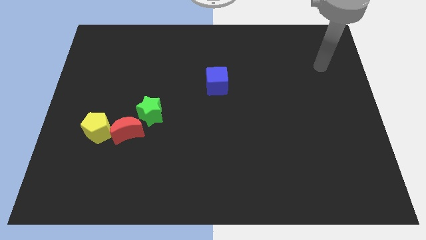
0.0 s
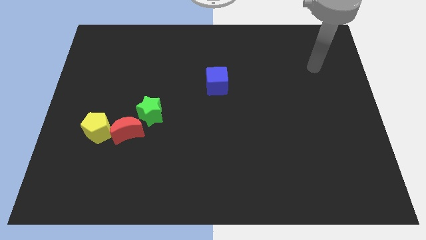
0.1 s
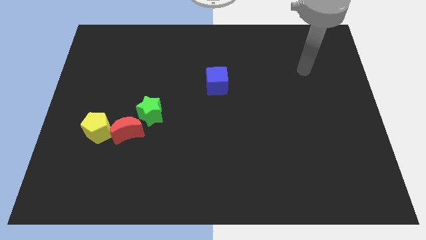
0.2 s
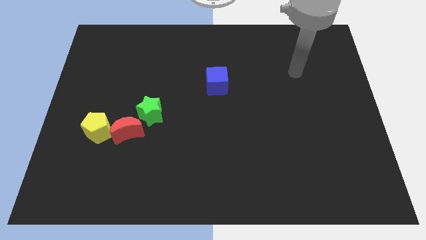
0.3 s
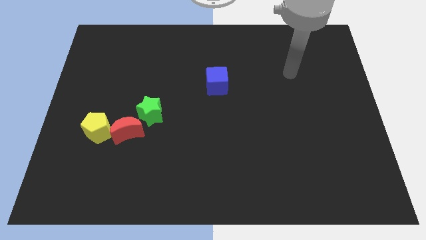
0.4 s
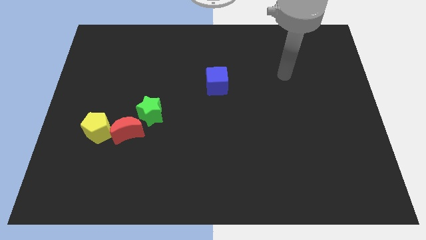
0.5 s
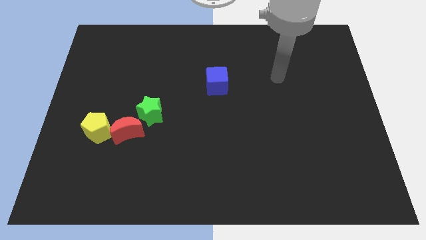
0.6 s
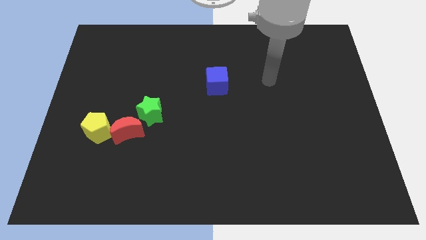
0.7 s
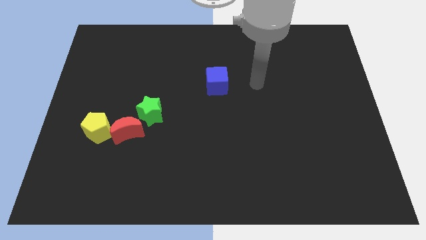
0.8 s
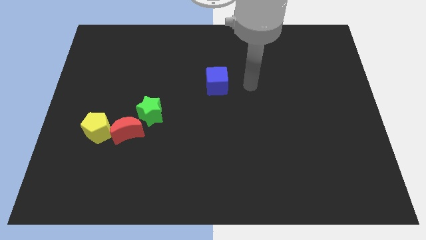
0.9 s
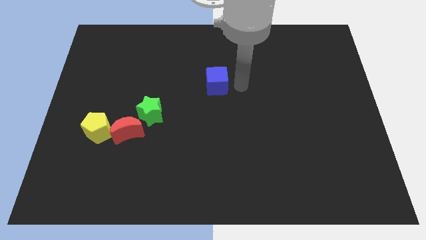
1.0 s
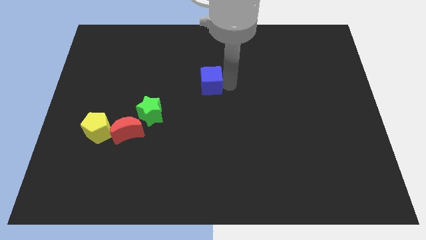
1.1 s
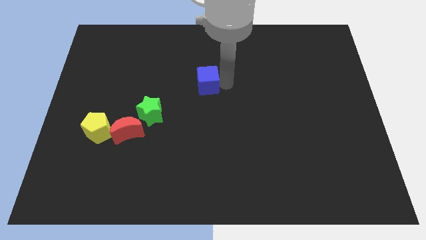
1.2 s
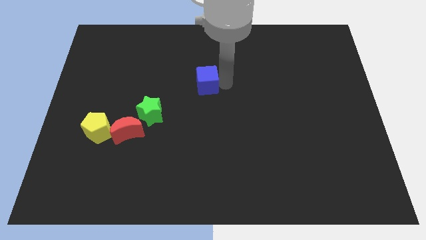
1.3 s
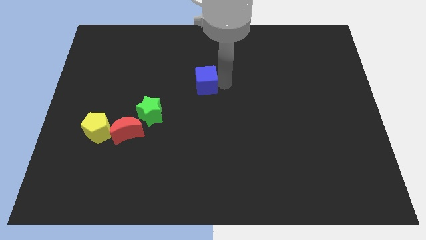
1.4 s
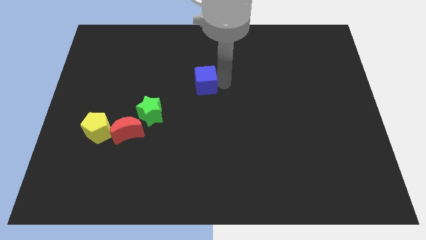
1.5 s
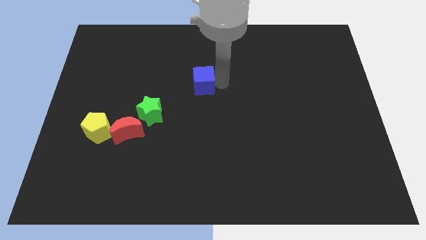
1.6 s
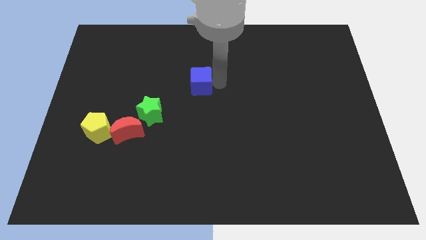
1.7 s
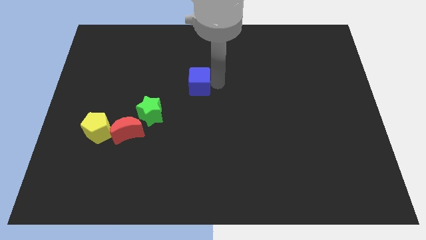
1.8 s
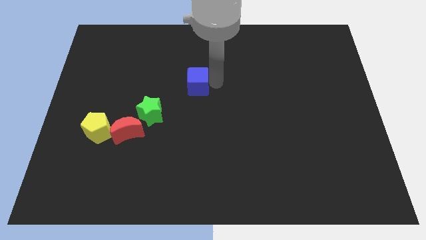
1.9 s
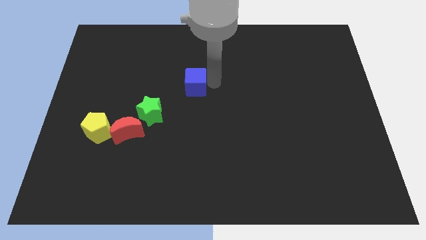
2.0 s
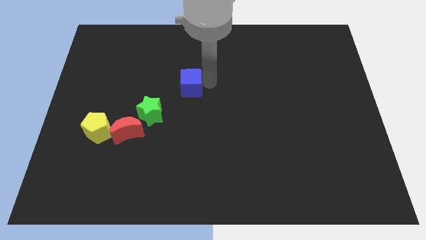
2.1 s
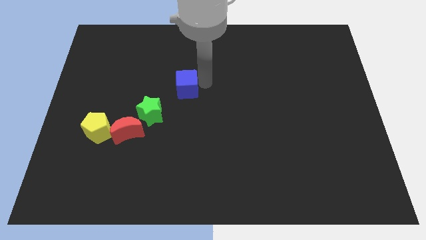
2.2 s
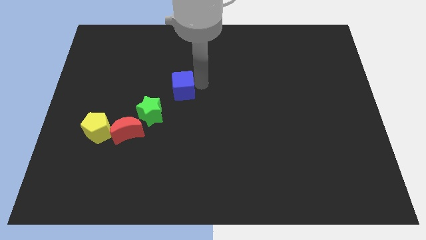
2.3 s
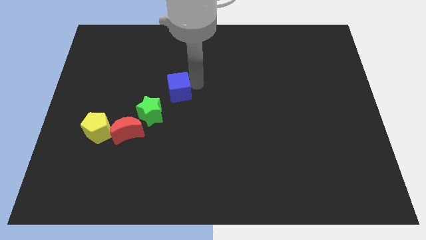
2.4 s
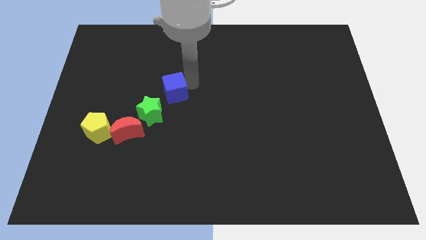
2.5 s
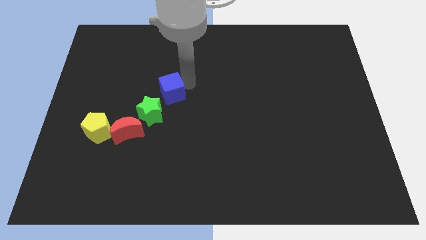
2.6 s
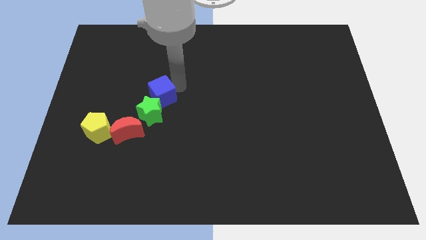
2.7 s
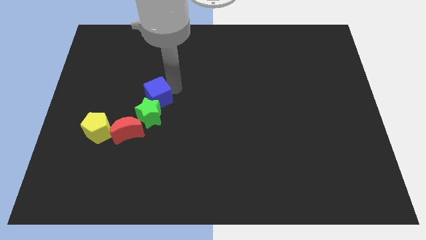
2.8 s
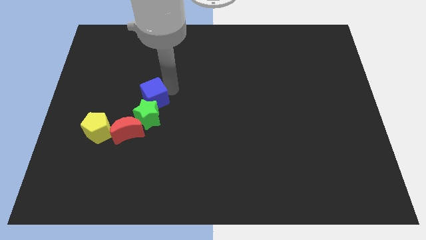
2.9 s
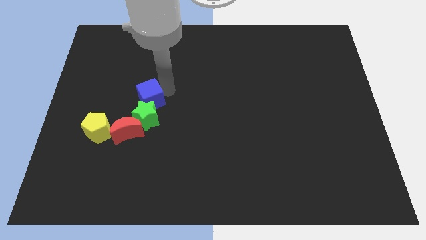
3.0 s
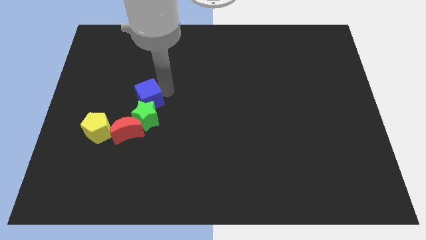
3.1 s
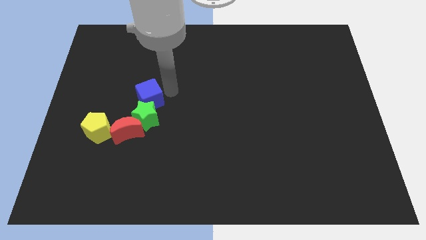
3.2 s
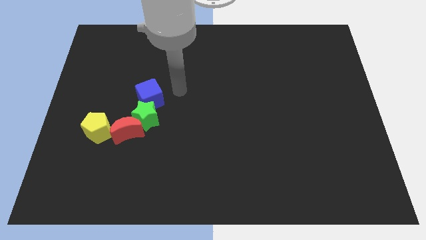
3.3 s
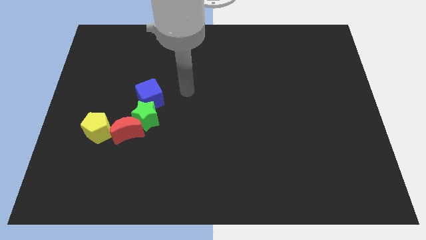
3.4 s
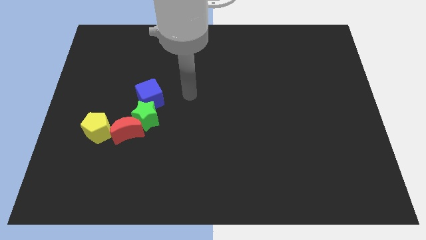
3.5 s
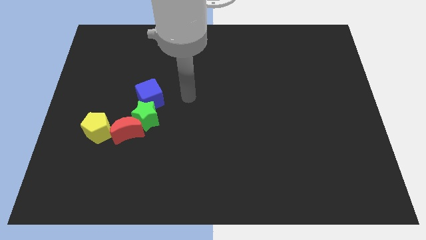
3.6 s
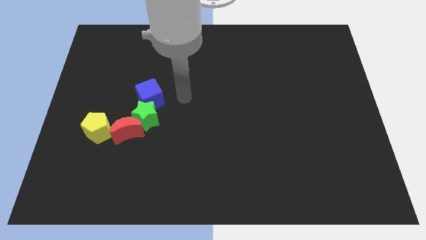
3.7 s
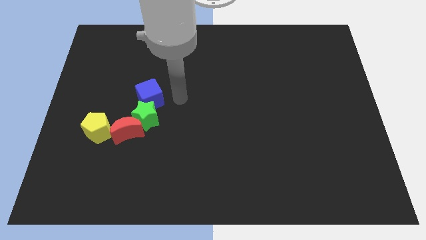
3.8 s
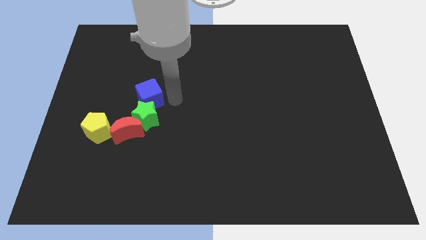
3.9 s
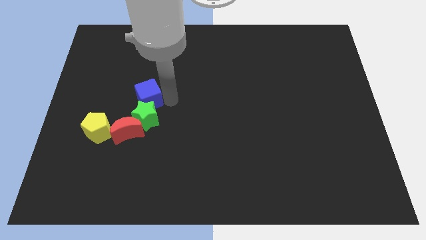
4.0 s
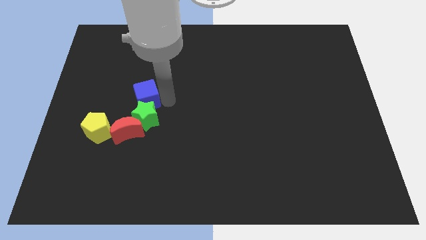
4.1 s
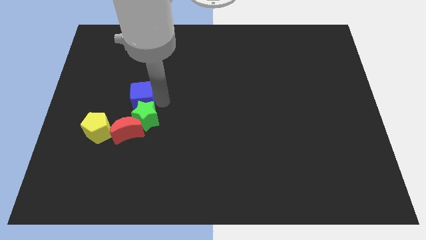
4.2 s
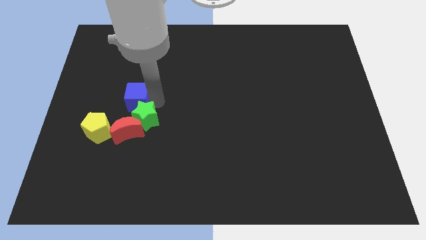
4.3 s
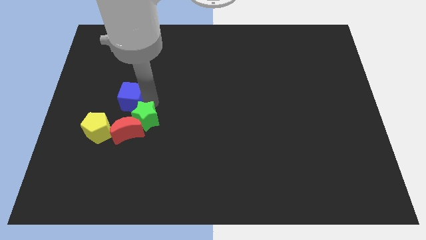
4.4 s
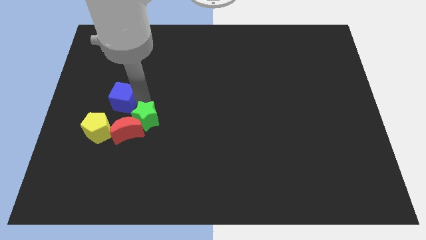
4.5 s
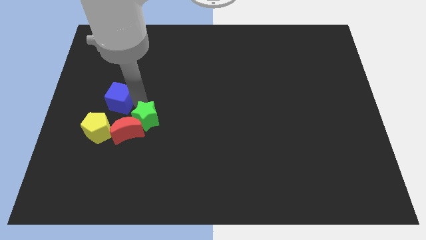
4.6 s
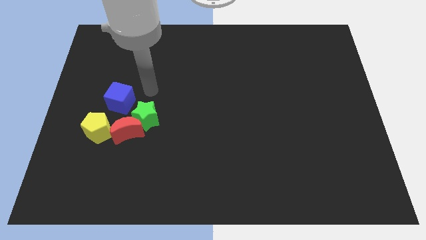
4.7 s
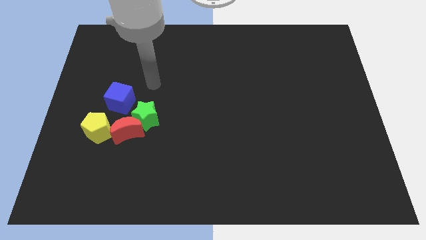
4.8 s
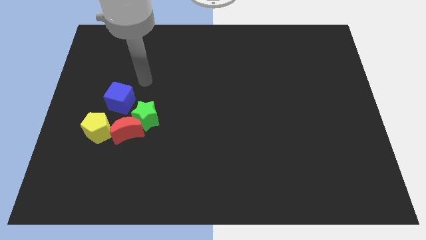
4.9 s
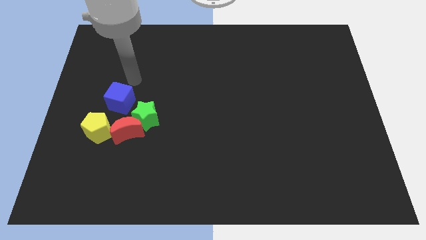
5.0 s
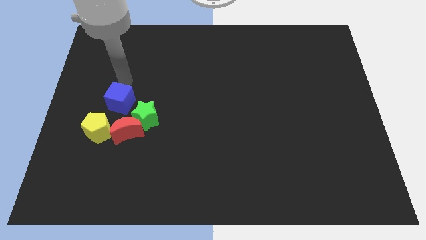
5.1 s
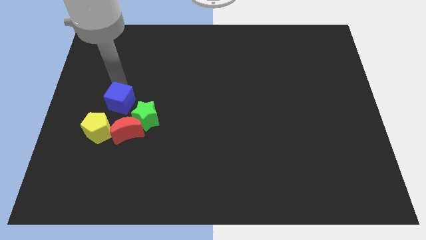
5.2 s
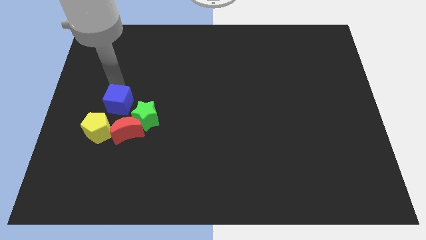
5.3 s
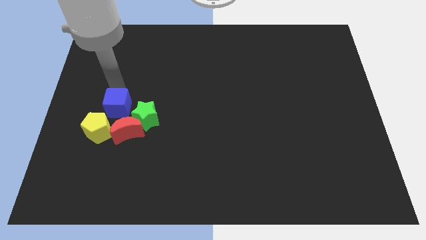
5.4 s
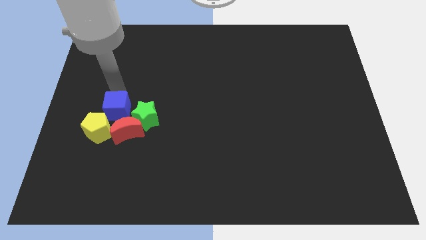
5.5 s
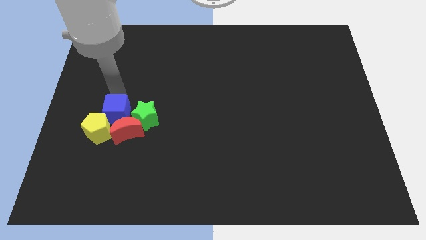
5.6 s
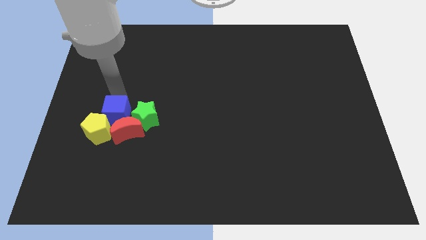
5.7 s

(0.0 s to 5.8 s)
move the cube to the pentagon

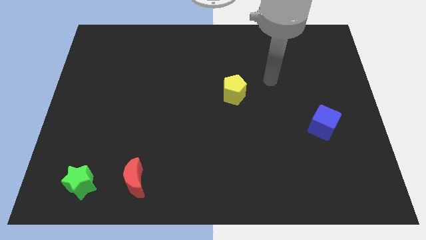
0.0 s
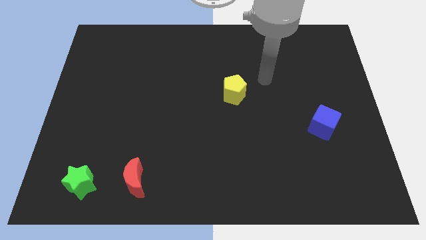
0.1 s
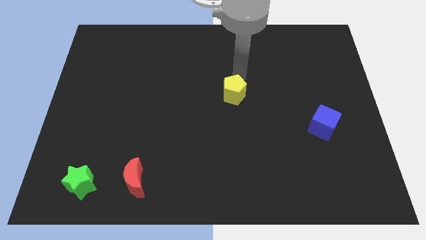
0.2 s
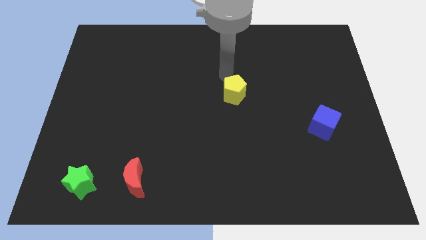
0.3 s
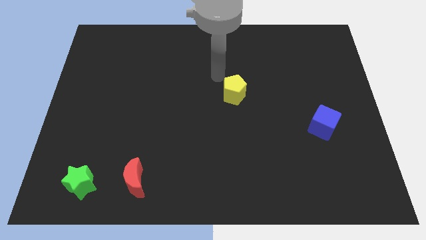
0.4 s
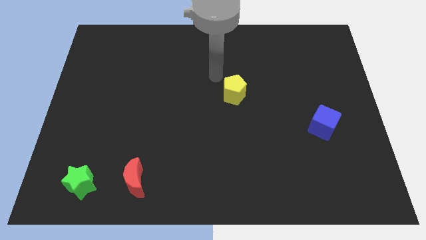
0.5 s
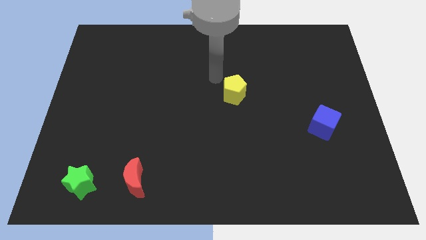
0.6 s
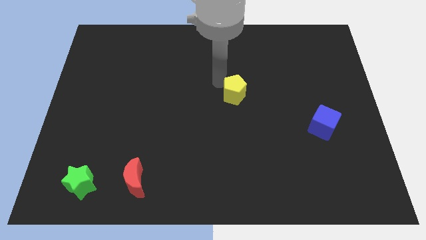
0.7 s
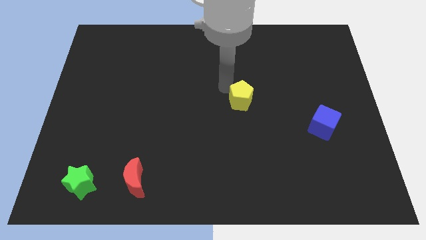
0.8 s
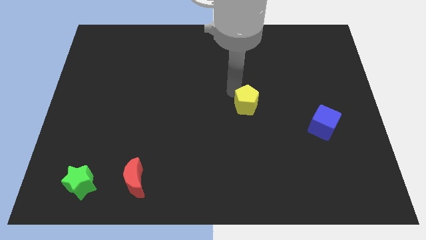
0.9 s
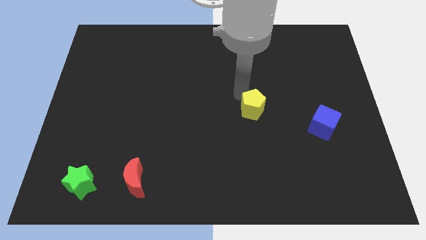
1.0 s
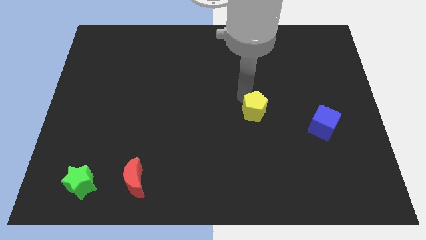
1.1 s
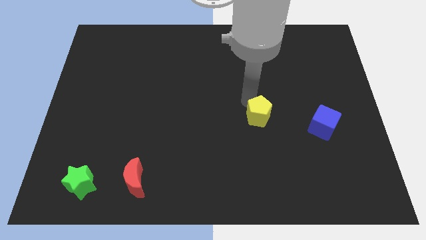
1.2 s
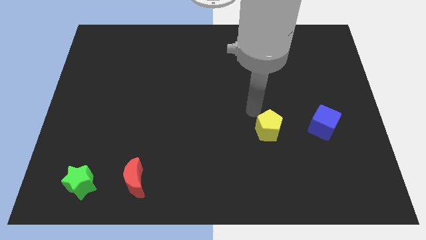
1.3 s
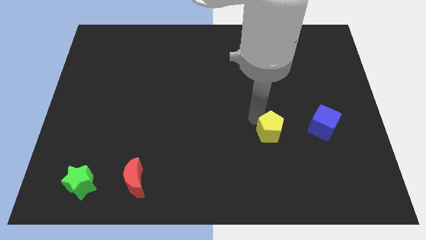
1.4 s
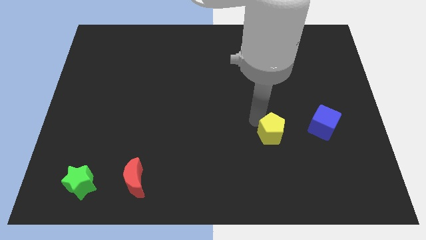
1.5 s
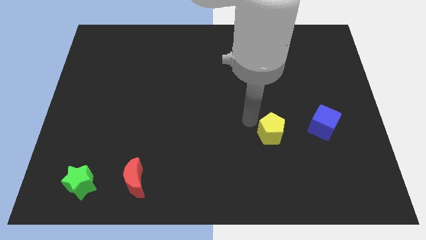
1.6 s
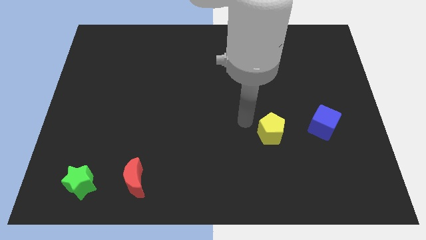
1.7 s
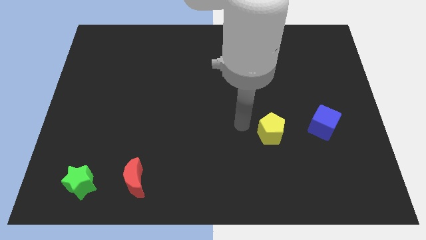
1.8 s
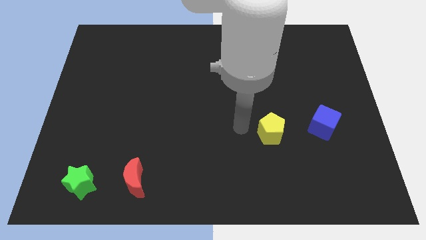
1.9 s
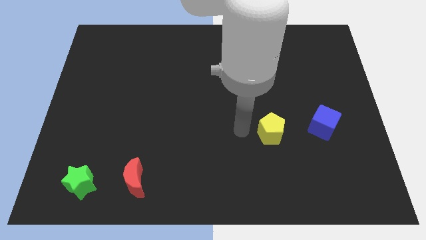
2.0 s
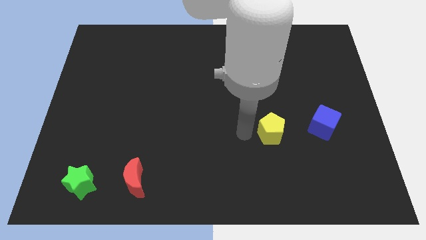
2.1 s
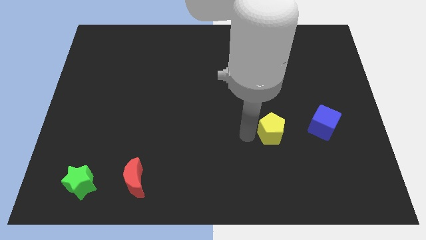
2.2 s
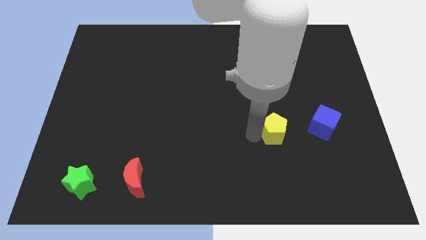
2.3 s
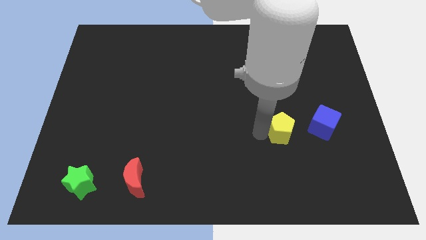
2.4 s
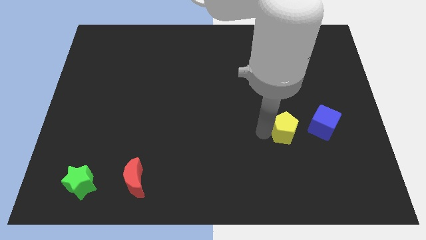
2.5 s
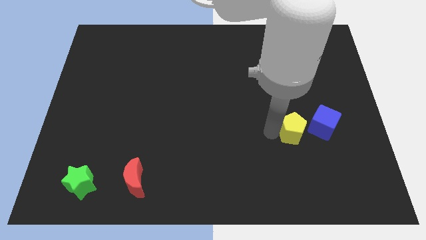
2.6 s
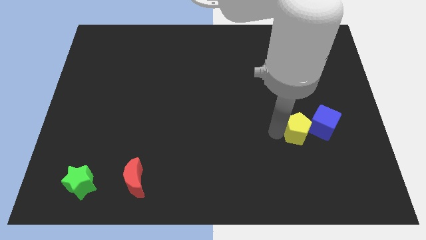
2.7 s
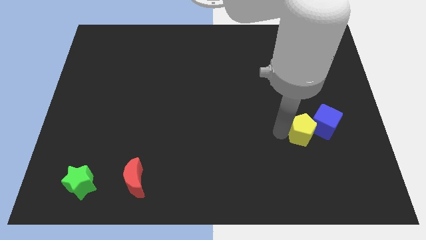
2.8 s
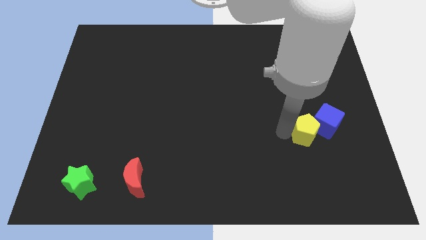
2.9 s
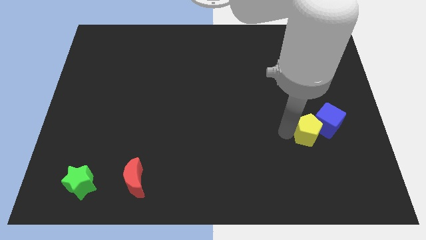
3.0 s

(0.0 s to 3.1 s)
push the yellow block close to the blue block

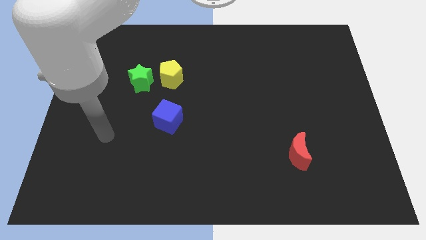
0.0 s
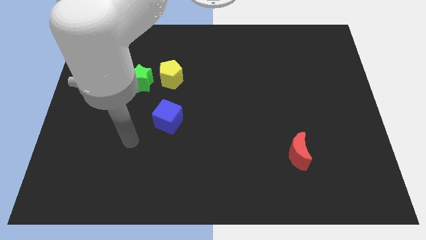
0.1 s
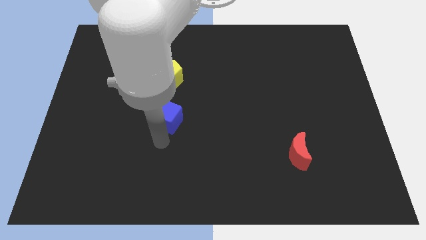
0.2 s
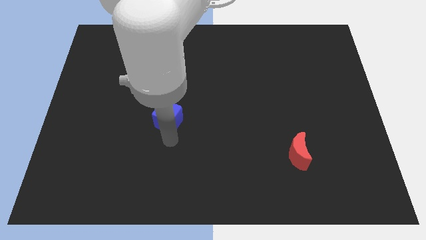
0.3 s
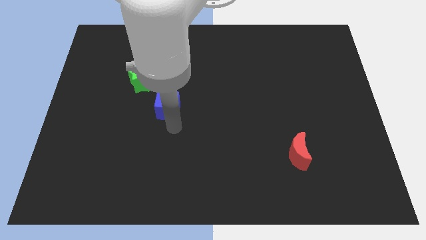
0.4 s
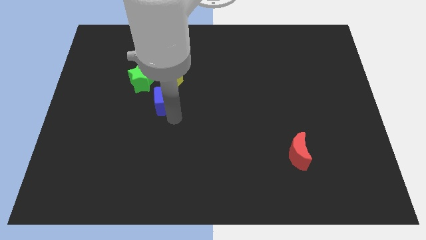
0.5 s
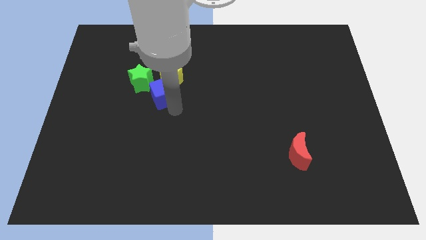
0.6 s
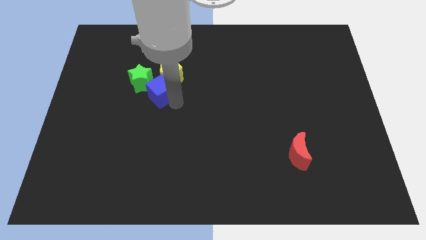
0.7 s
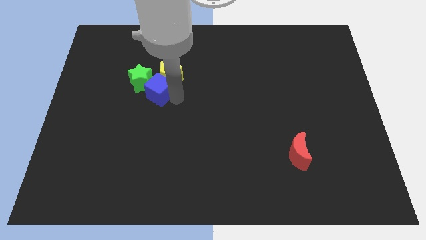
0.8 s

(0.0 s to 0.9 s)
put the cube close to the yellow block
